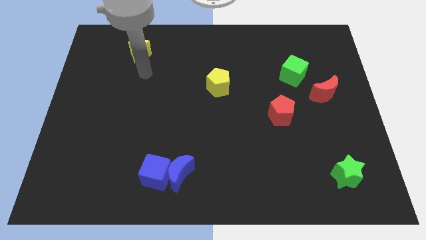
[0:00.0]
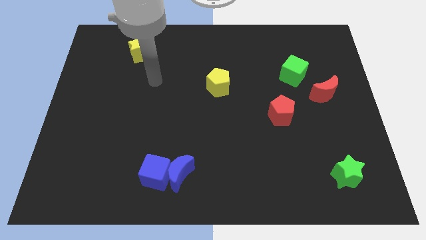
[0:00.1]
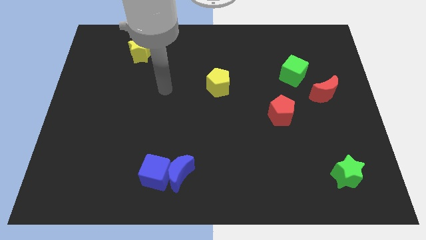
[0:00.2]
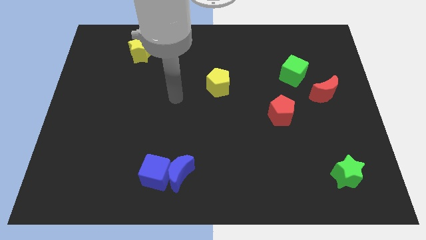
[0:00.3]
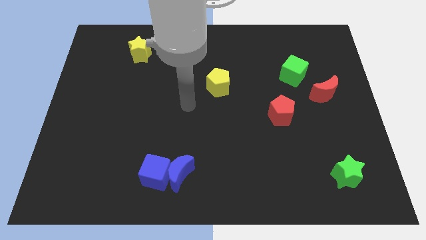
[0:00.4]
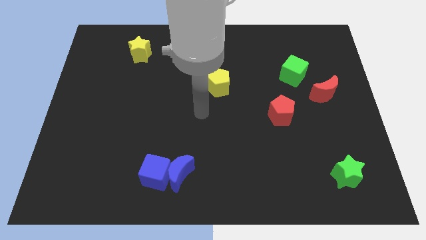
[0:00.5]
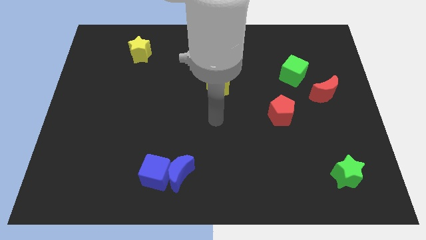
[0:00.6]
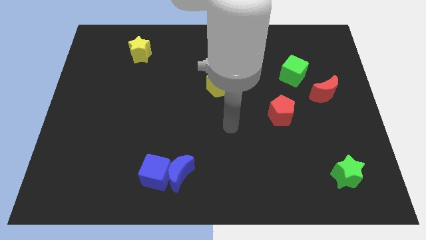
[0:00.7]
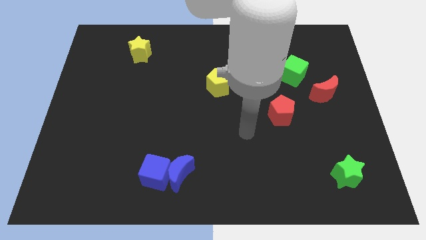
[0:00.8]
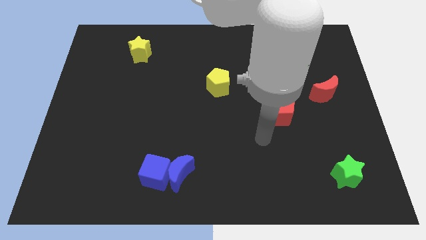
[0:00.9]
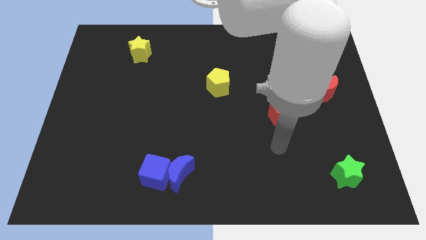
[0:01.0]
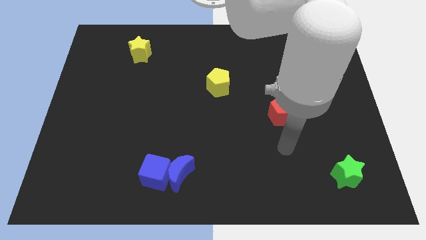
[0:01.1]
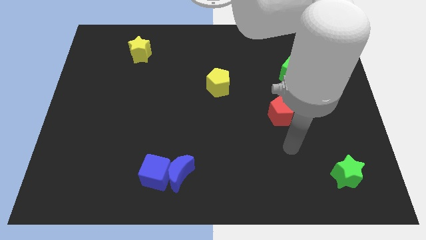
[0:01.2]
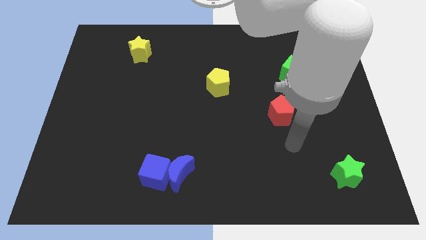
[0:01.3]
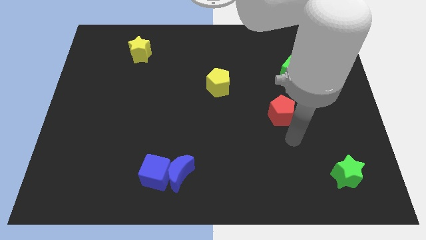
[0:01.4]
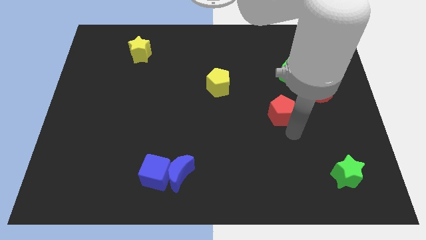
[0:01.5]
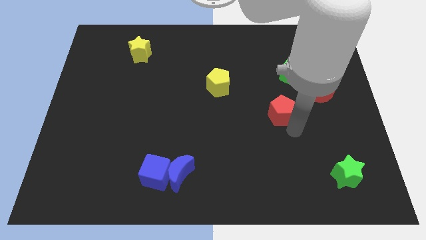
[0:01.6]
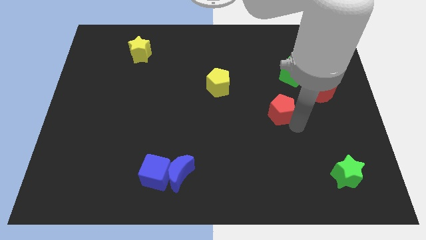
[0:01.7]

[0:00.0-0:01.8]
point your arm below red pentagon

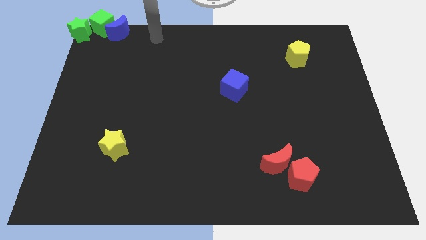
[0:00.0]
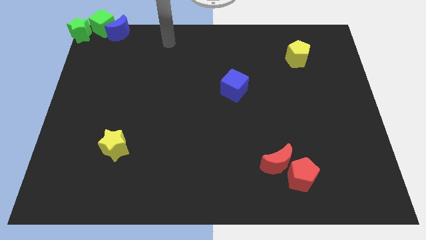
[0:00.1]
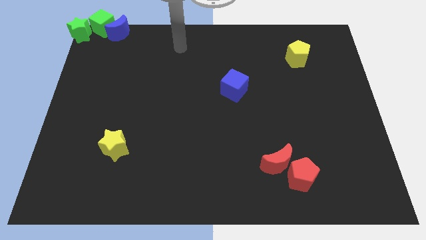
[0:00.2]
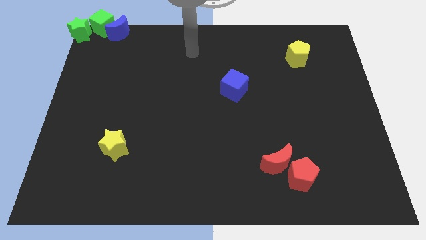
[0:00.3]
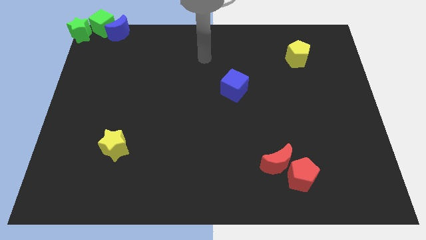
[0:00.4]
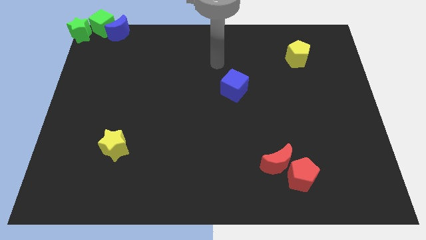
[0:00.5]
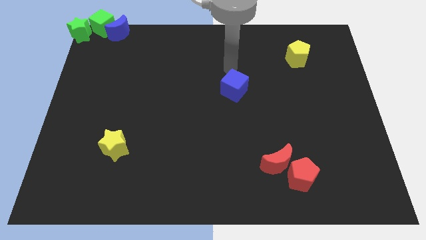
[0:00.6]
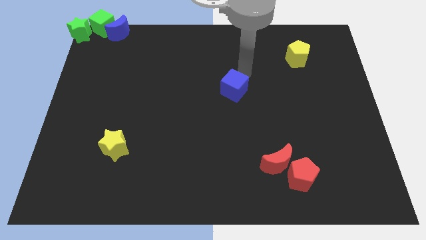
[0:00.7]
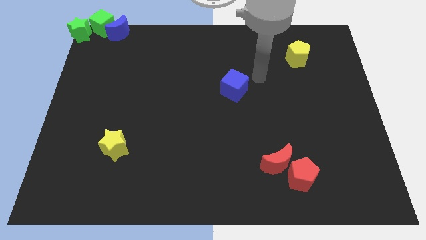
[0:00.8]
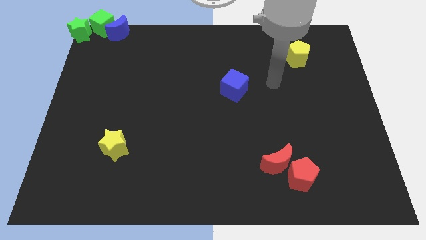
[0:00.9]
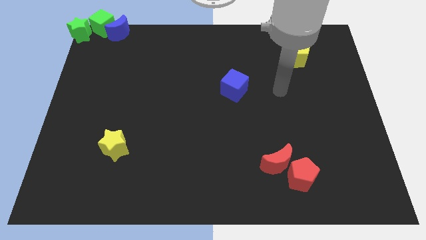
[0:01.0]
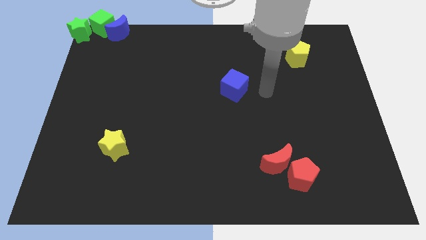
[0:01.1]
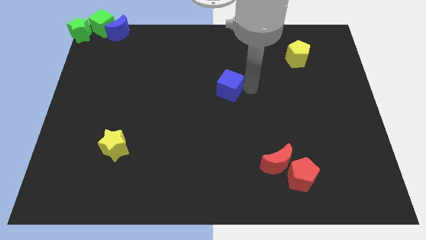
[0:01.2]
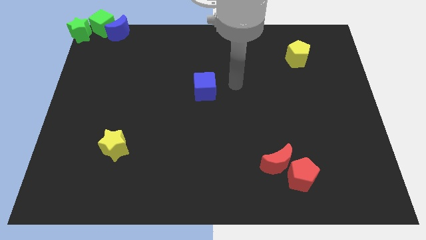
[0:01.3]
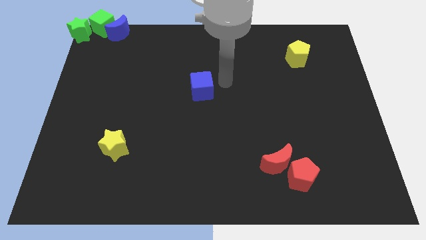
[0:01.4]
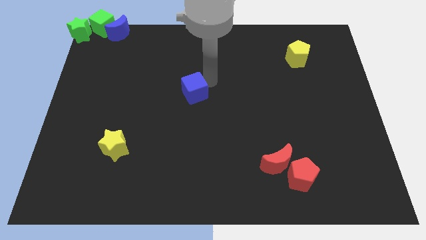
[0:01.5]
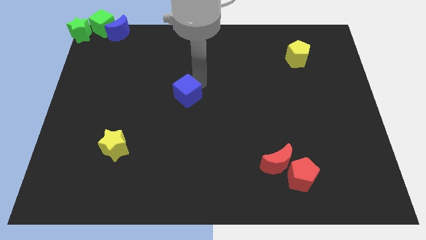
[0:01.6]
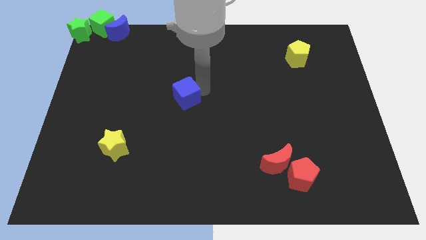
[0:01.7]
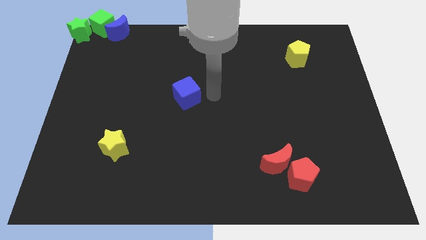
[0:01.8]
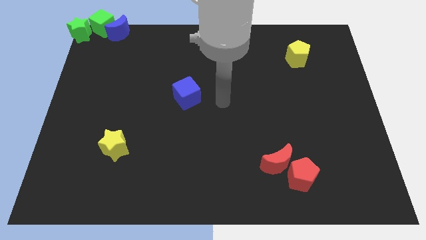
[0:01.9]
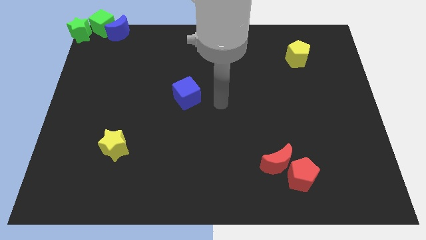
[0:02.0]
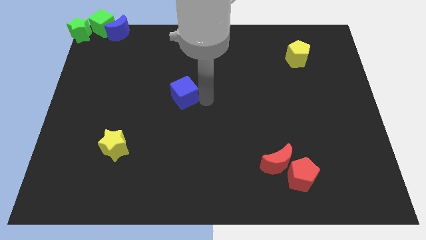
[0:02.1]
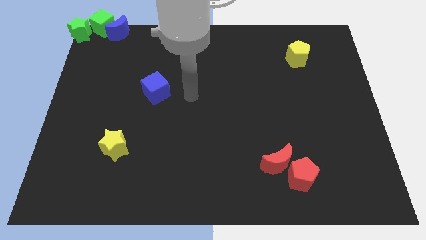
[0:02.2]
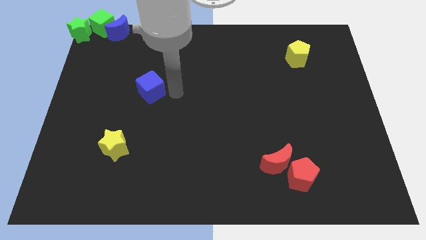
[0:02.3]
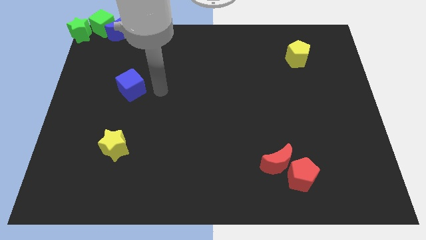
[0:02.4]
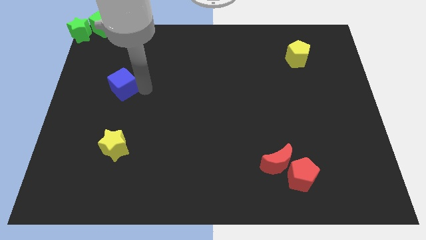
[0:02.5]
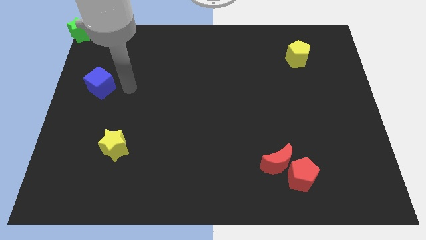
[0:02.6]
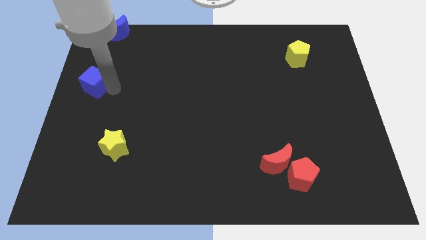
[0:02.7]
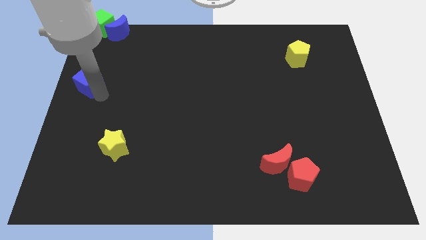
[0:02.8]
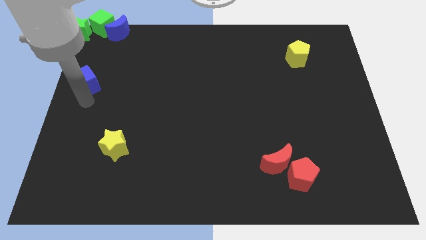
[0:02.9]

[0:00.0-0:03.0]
move the blue cube to the left

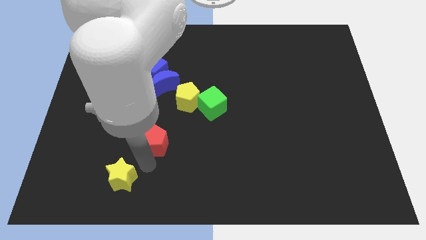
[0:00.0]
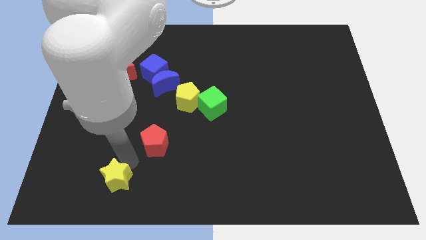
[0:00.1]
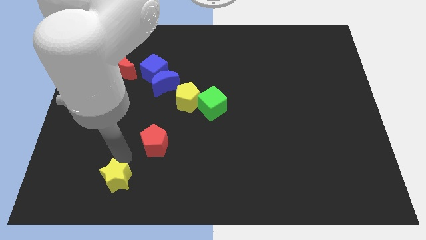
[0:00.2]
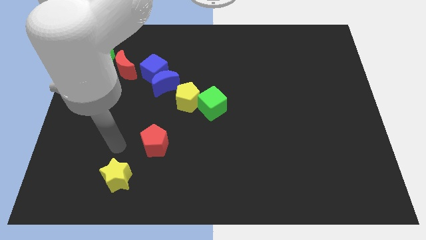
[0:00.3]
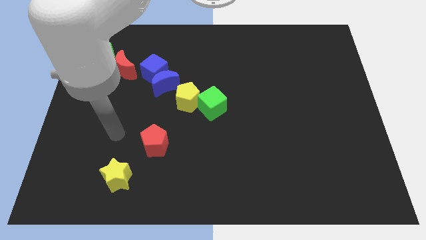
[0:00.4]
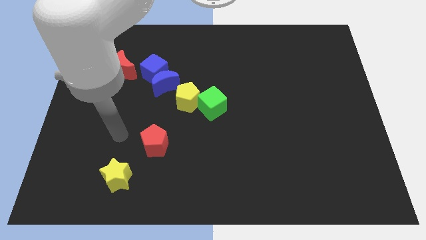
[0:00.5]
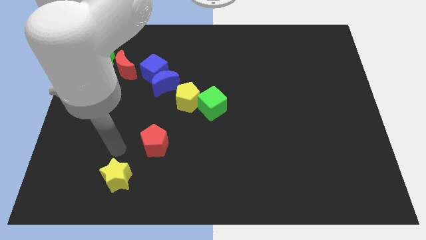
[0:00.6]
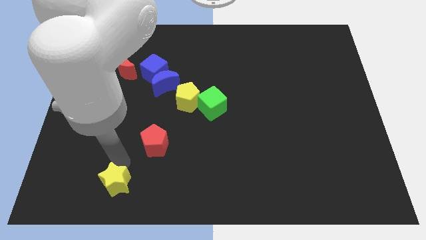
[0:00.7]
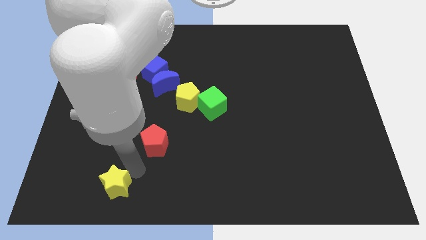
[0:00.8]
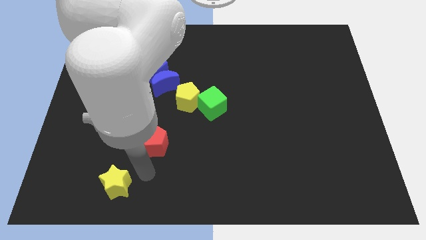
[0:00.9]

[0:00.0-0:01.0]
push the yellow star slightly towards the bottom

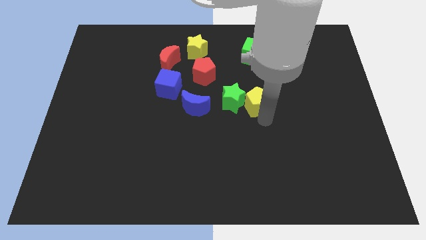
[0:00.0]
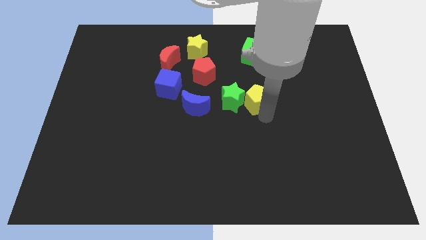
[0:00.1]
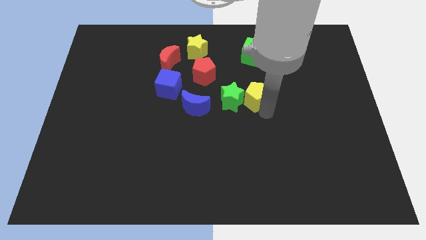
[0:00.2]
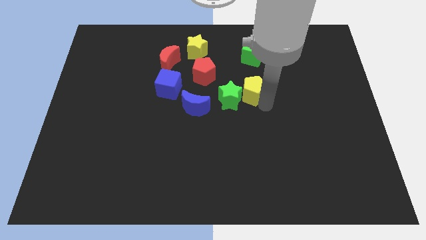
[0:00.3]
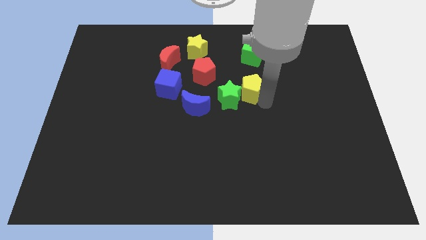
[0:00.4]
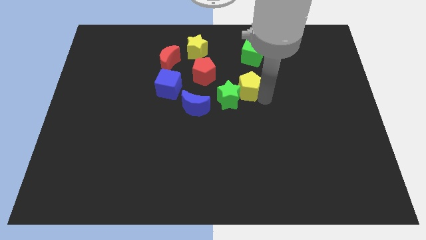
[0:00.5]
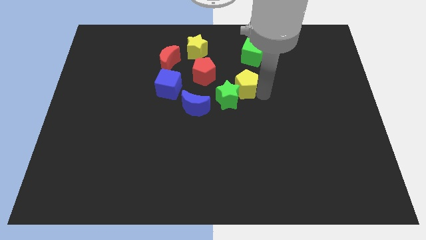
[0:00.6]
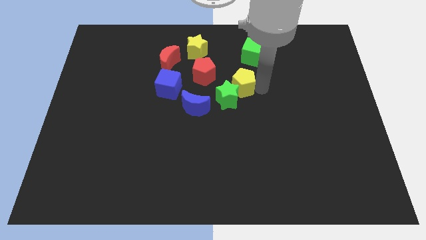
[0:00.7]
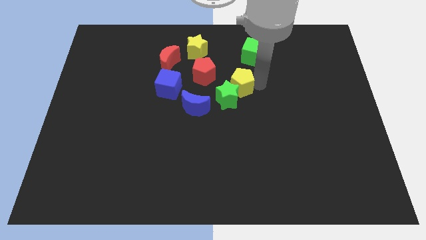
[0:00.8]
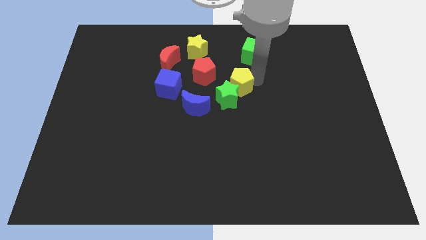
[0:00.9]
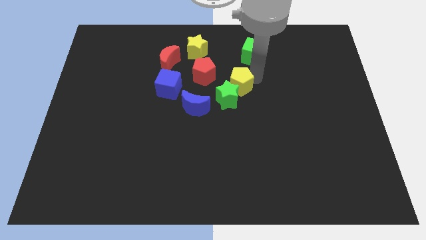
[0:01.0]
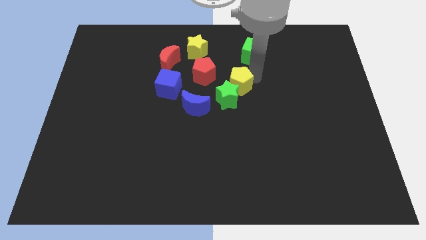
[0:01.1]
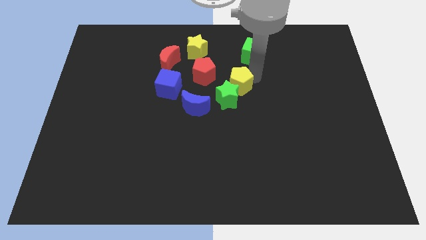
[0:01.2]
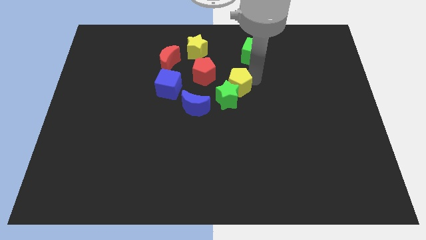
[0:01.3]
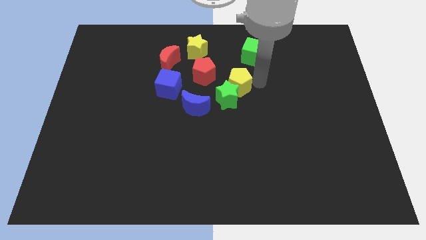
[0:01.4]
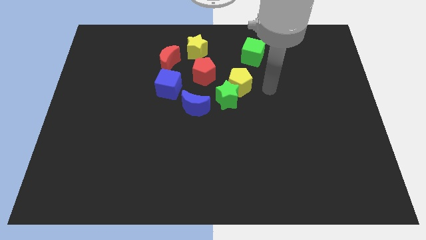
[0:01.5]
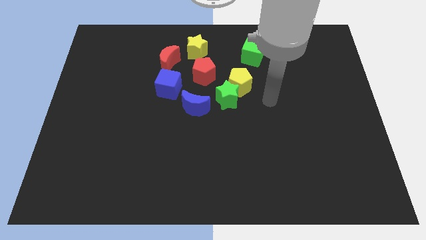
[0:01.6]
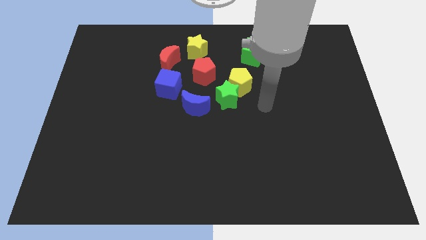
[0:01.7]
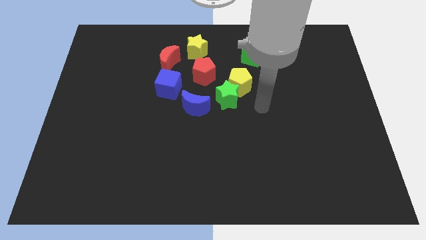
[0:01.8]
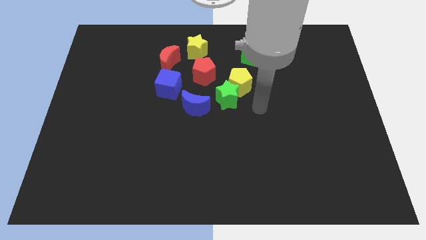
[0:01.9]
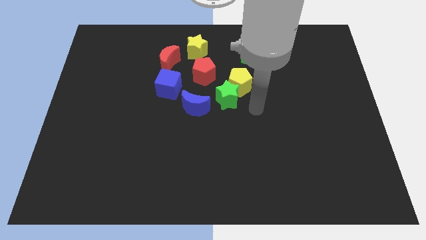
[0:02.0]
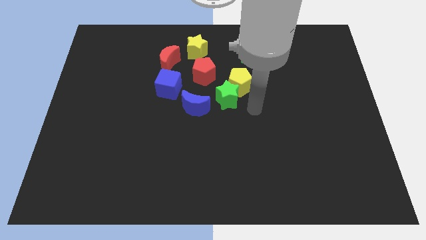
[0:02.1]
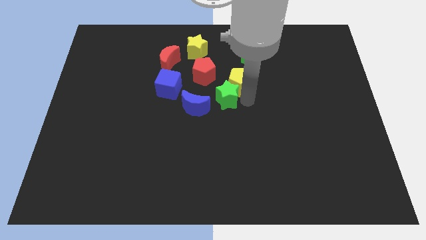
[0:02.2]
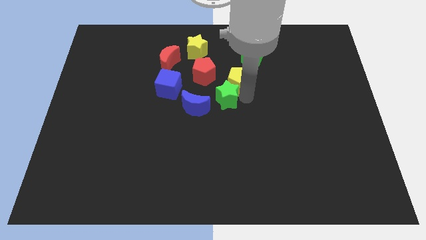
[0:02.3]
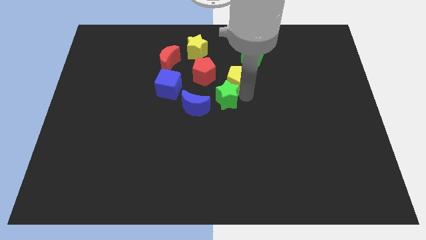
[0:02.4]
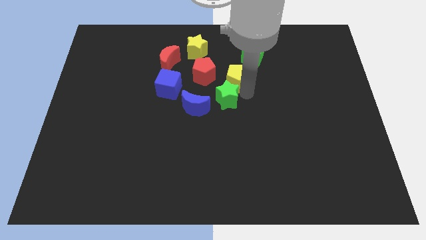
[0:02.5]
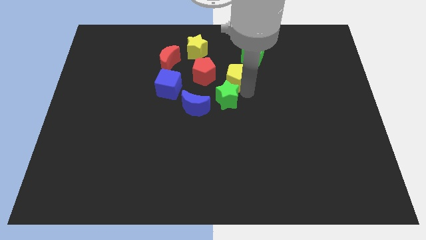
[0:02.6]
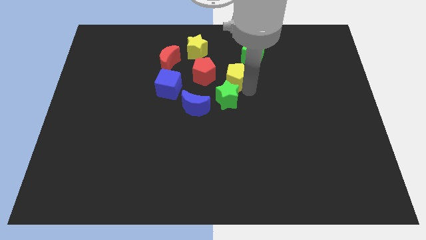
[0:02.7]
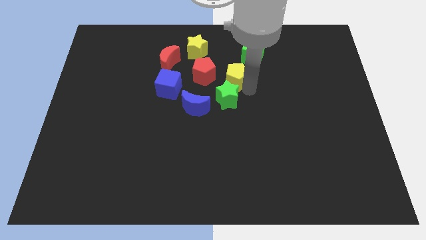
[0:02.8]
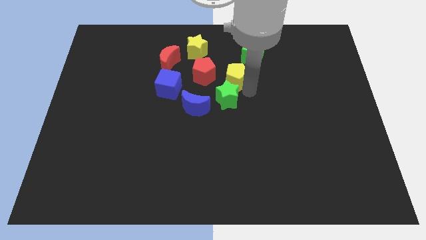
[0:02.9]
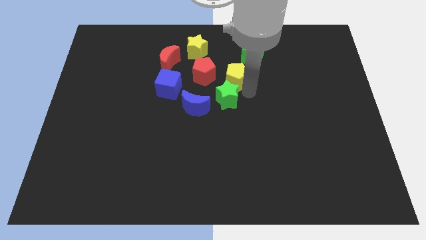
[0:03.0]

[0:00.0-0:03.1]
place the yellow pentagon right to the red pentagon
